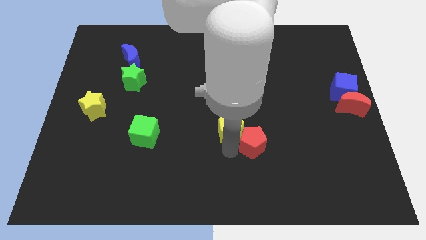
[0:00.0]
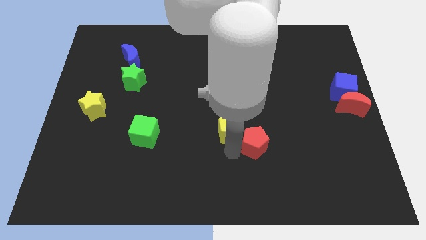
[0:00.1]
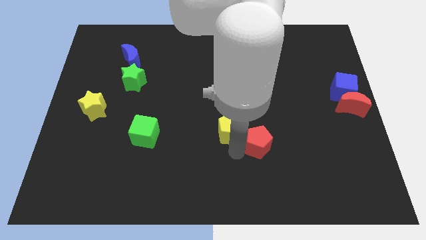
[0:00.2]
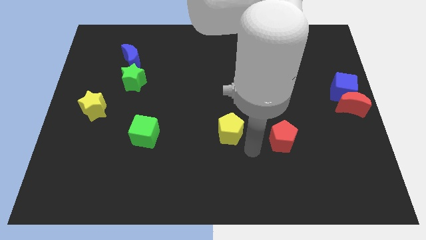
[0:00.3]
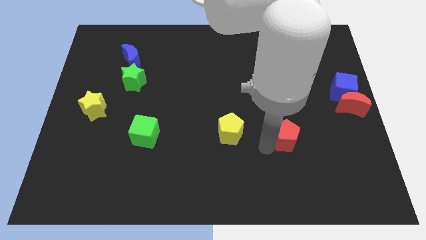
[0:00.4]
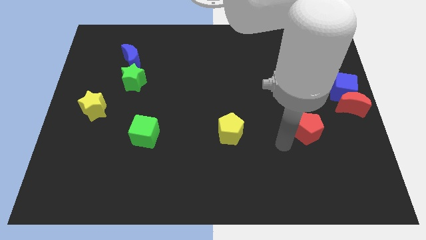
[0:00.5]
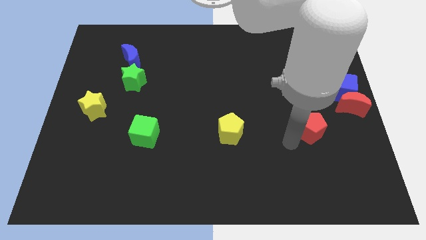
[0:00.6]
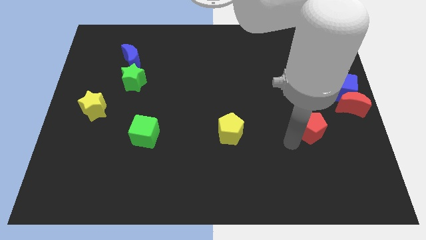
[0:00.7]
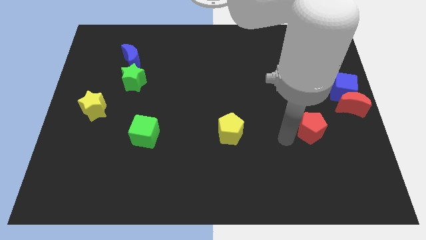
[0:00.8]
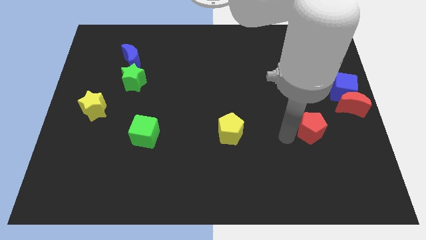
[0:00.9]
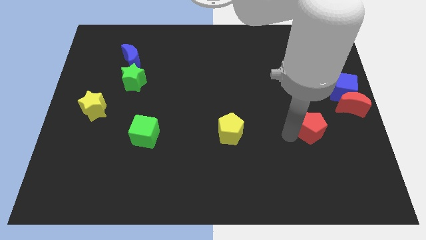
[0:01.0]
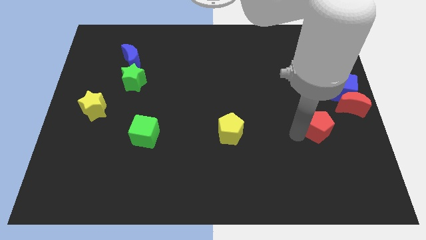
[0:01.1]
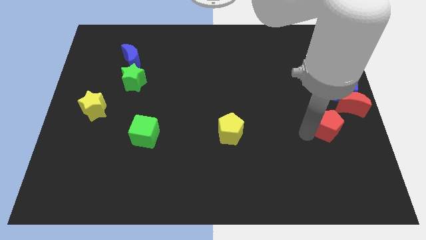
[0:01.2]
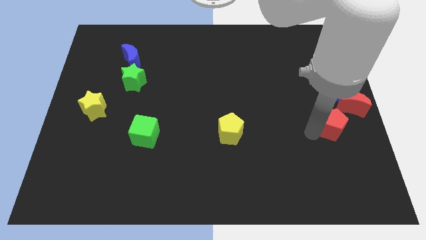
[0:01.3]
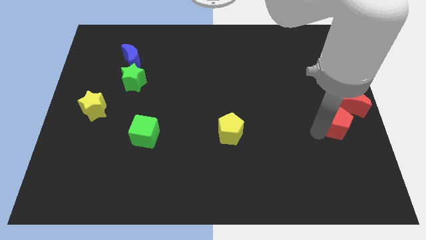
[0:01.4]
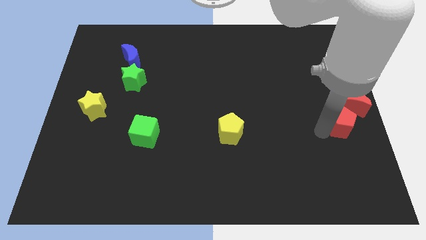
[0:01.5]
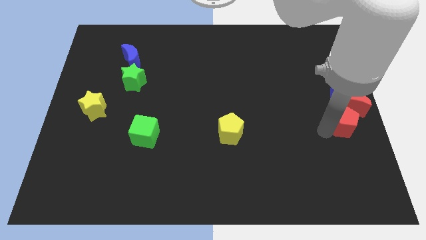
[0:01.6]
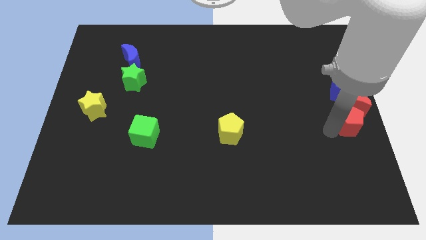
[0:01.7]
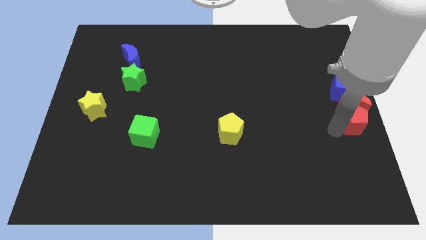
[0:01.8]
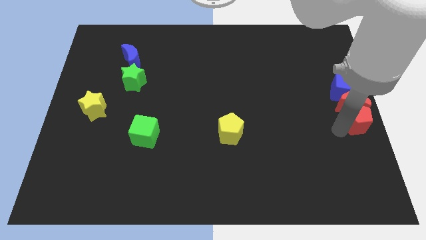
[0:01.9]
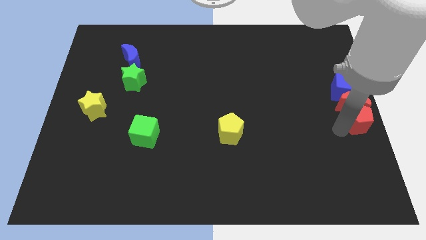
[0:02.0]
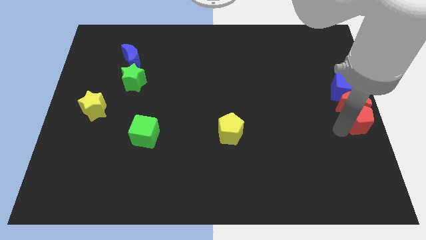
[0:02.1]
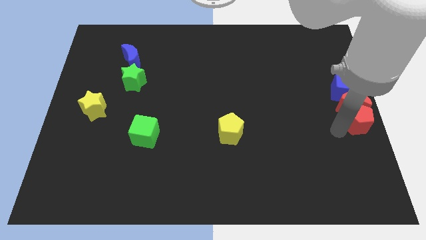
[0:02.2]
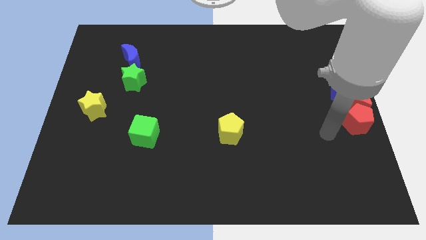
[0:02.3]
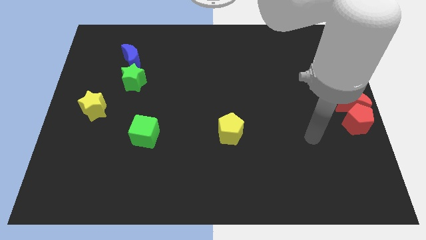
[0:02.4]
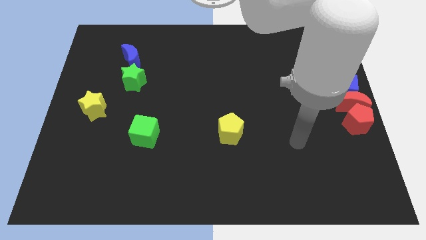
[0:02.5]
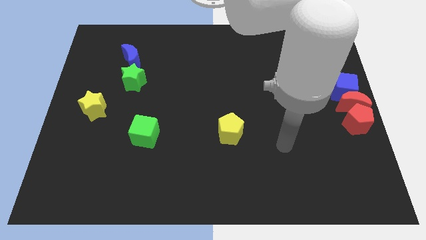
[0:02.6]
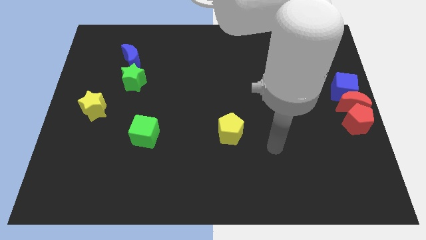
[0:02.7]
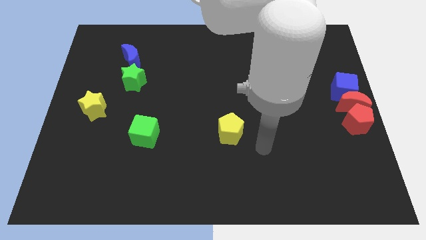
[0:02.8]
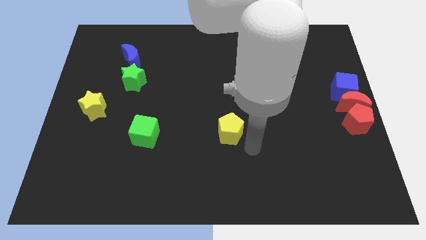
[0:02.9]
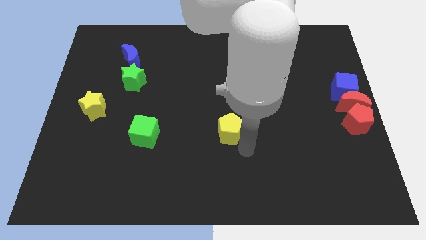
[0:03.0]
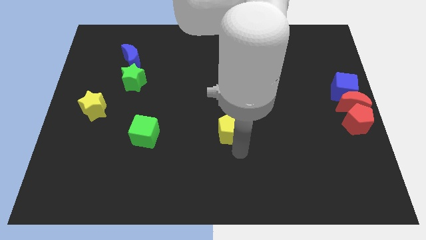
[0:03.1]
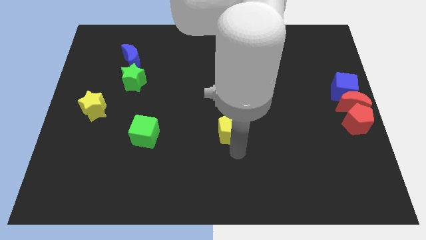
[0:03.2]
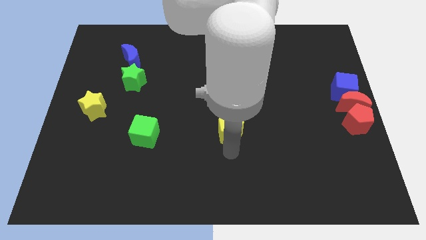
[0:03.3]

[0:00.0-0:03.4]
place the red pentagon below the red crescent

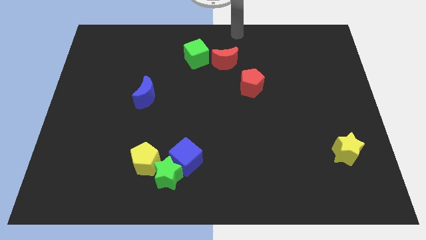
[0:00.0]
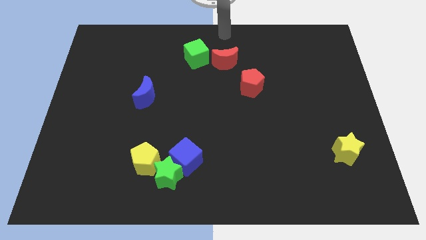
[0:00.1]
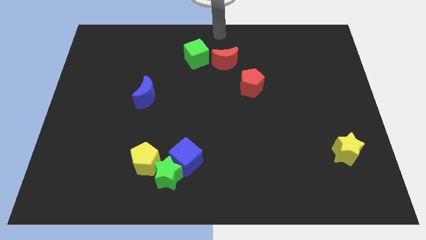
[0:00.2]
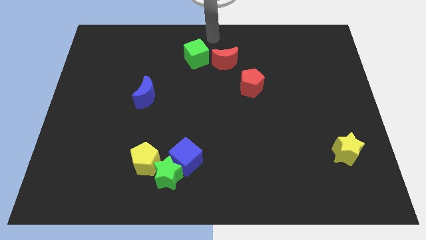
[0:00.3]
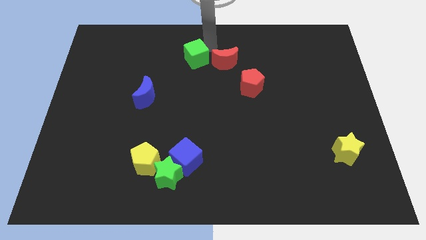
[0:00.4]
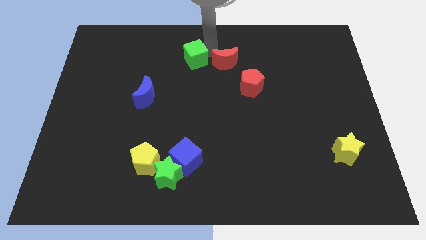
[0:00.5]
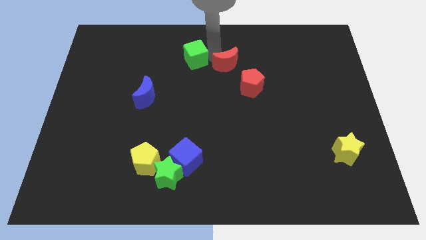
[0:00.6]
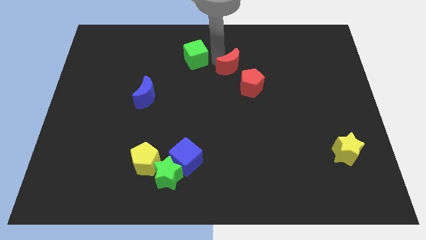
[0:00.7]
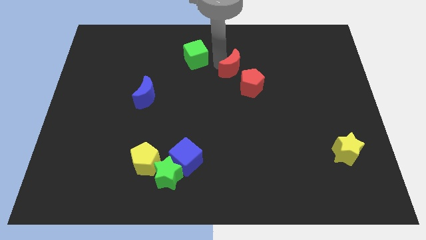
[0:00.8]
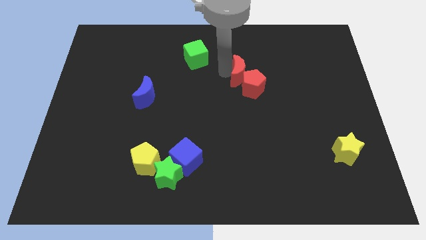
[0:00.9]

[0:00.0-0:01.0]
push the red crescent into the red pentagon

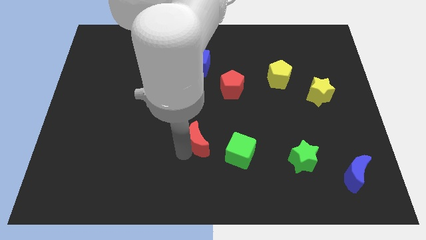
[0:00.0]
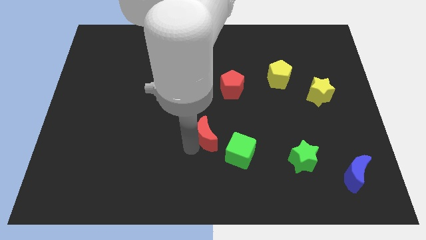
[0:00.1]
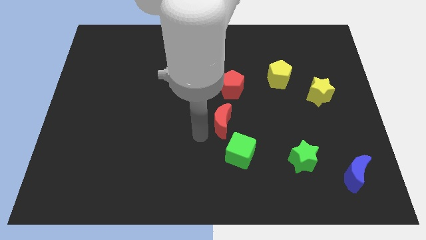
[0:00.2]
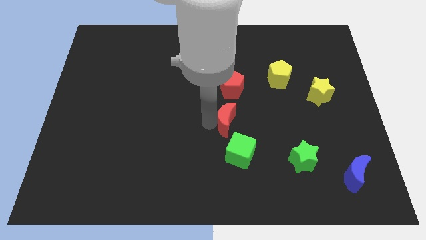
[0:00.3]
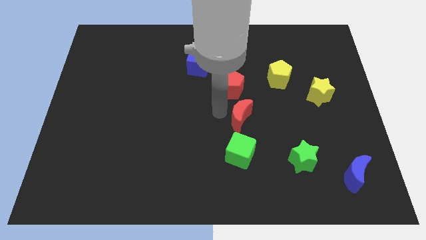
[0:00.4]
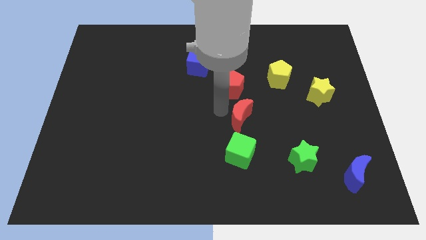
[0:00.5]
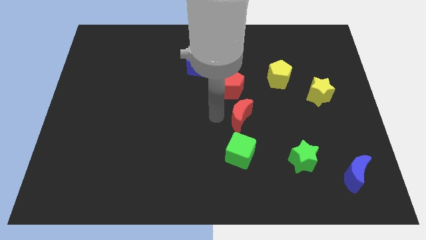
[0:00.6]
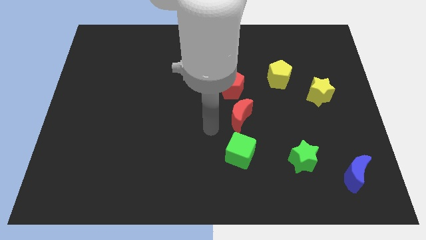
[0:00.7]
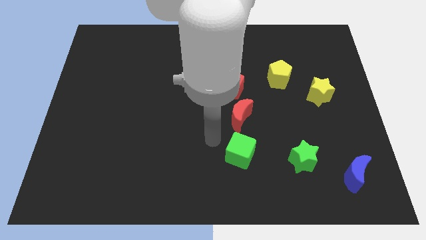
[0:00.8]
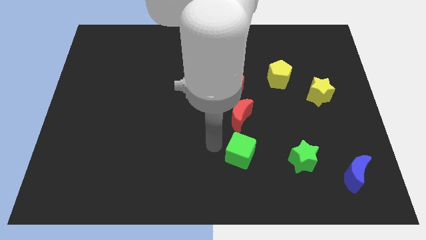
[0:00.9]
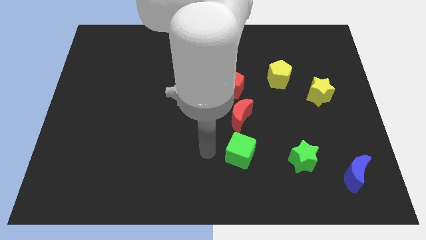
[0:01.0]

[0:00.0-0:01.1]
move the red crescent above the green cube

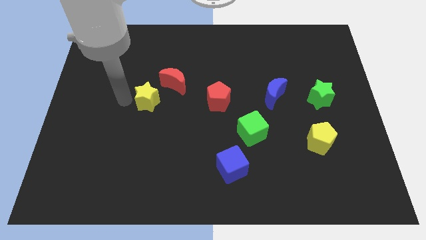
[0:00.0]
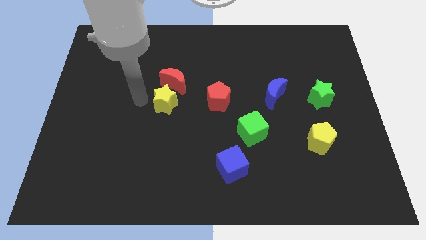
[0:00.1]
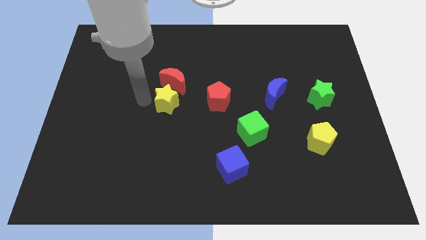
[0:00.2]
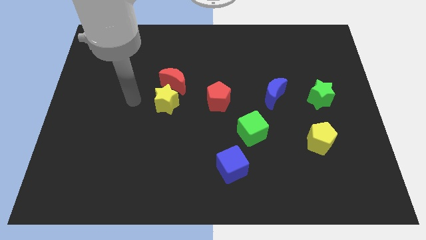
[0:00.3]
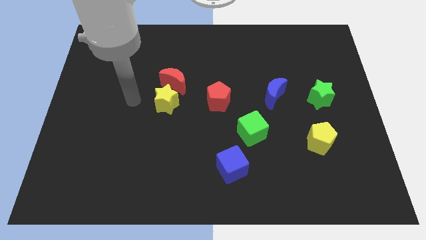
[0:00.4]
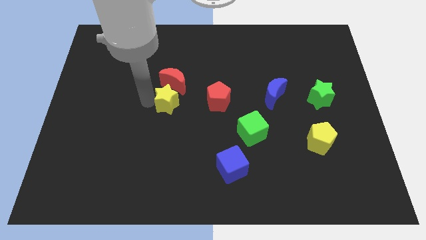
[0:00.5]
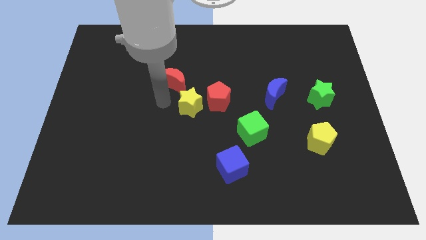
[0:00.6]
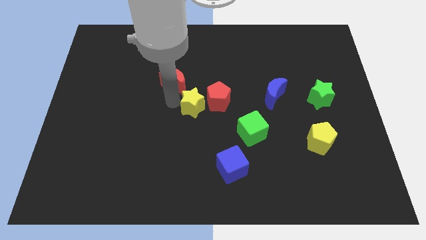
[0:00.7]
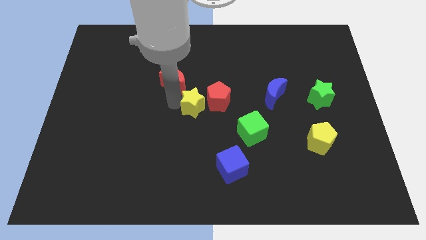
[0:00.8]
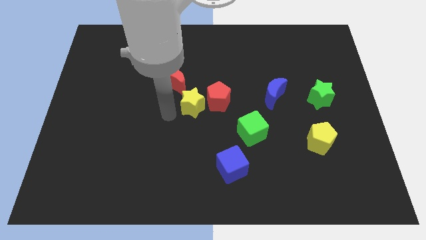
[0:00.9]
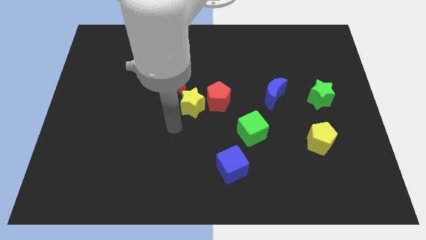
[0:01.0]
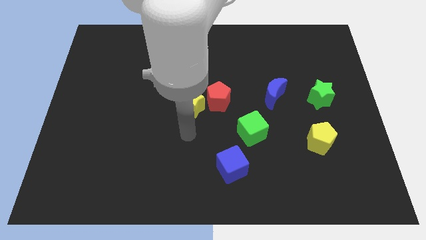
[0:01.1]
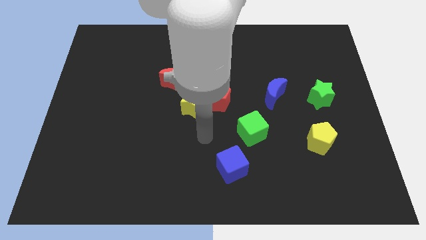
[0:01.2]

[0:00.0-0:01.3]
slide the yellow star towards the red pentagon

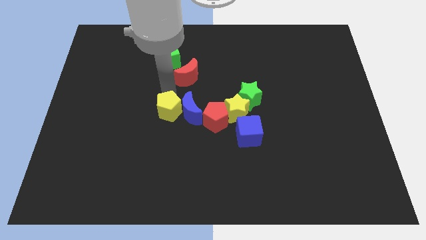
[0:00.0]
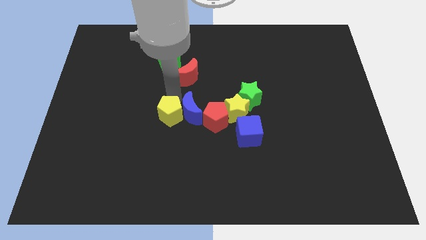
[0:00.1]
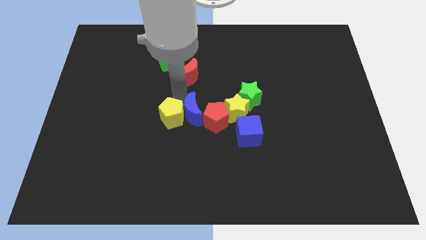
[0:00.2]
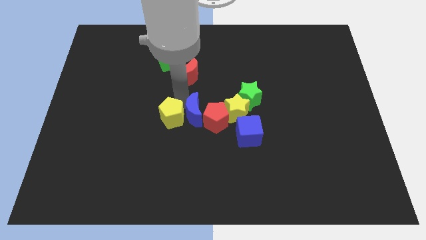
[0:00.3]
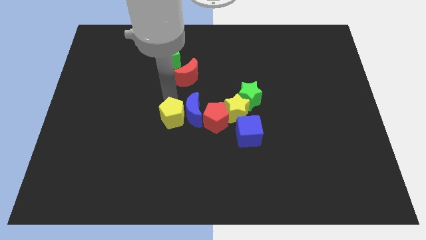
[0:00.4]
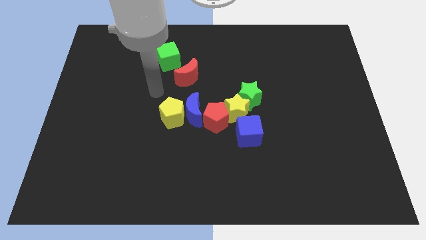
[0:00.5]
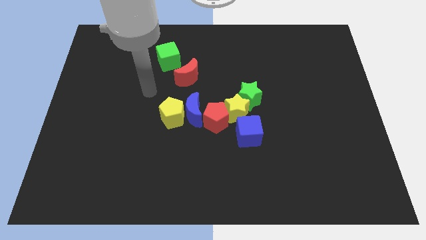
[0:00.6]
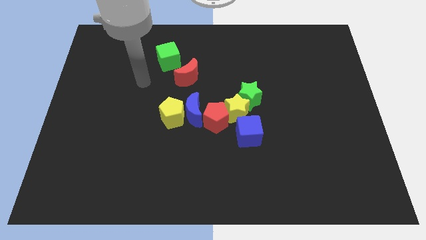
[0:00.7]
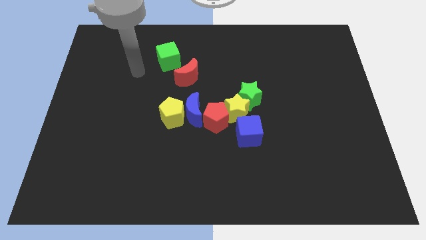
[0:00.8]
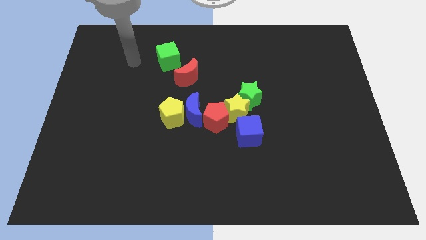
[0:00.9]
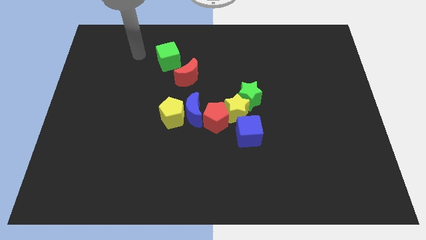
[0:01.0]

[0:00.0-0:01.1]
adjust the yellow pentagon horizontally to the left of the blue crescent

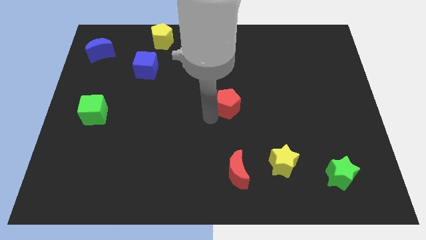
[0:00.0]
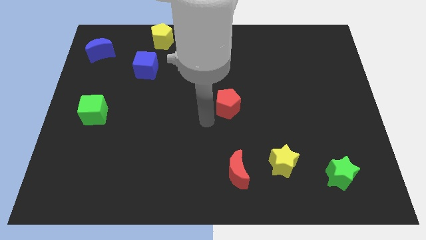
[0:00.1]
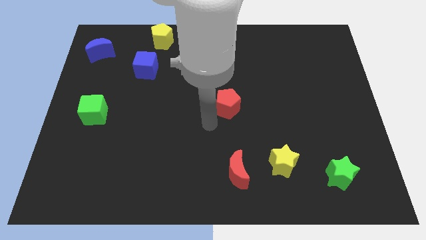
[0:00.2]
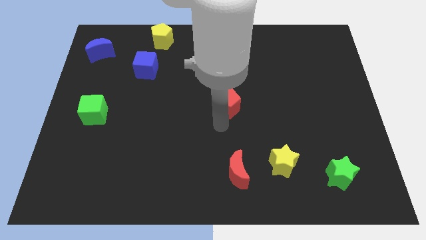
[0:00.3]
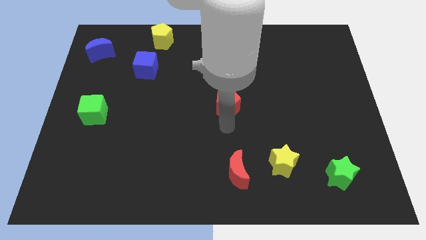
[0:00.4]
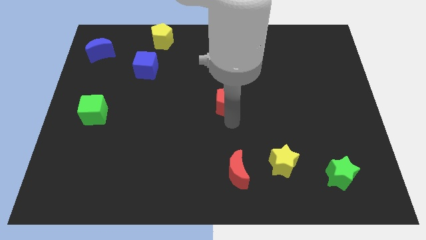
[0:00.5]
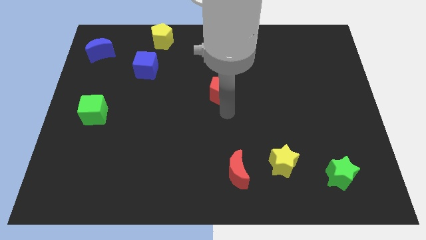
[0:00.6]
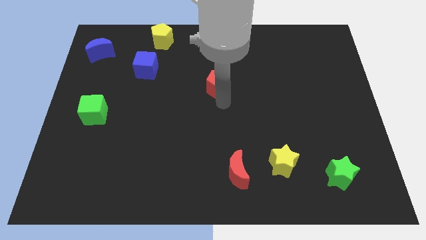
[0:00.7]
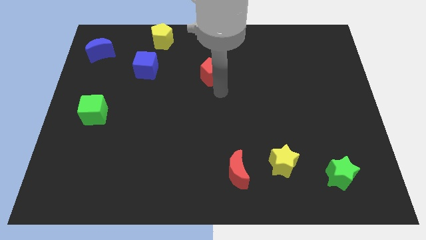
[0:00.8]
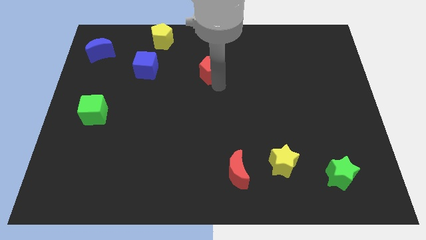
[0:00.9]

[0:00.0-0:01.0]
push the red pentagon slightly to the top of the board
